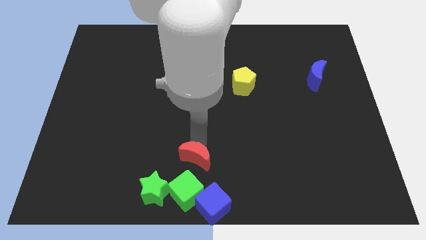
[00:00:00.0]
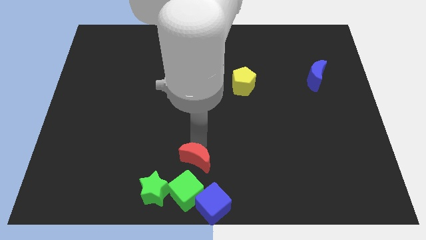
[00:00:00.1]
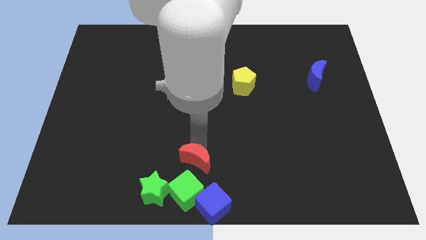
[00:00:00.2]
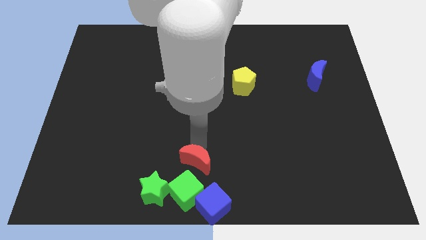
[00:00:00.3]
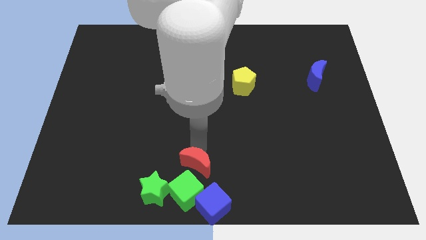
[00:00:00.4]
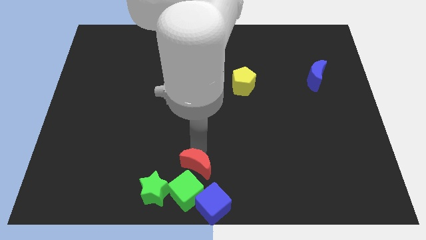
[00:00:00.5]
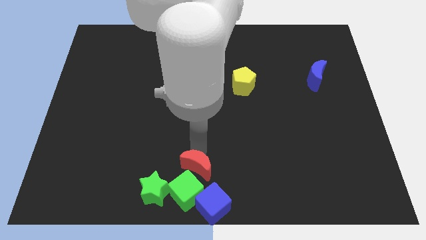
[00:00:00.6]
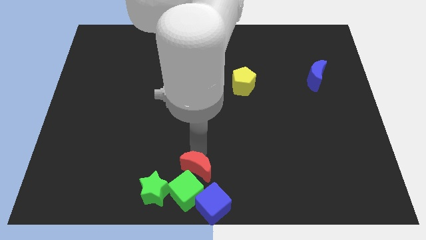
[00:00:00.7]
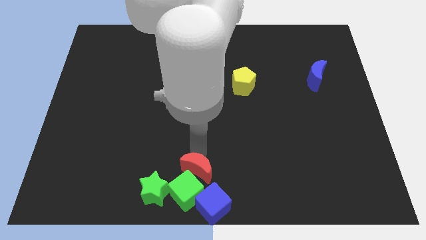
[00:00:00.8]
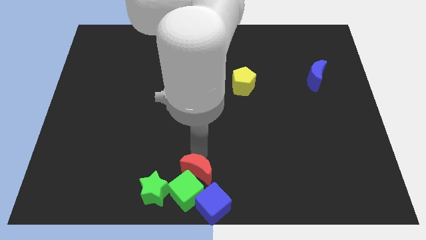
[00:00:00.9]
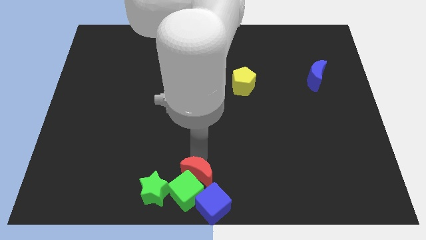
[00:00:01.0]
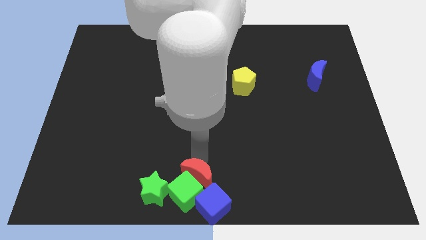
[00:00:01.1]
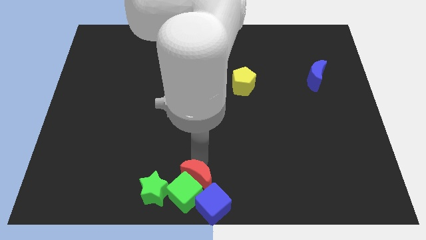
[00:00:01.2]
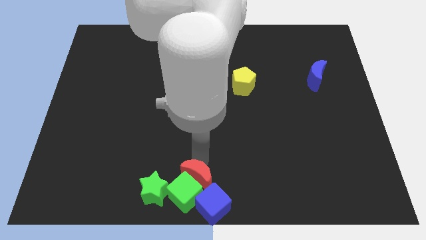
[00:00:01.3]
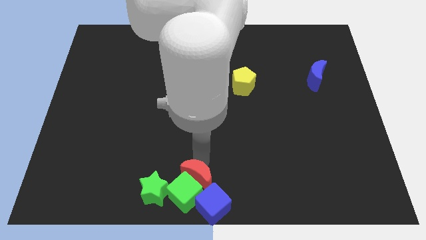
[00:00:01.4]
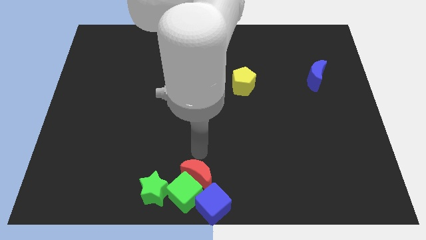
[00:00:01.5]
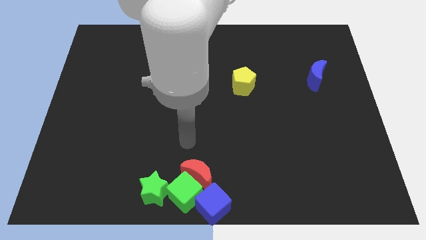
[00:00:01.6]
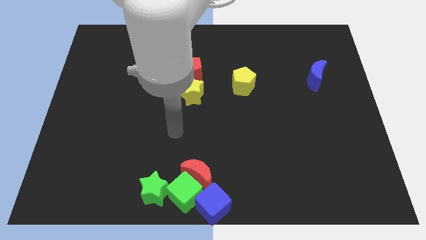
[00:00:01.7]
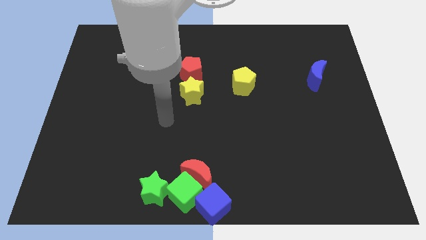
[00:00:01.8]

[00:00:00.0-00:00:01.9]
move the red crescent close to the green cube

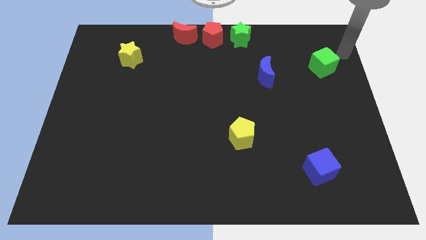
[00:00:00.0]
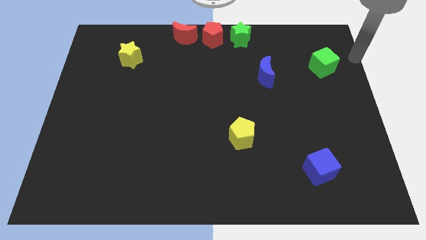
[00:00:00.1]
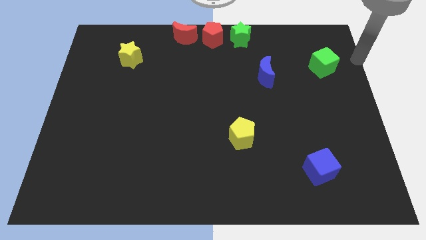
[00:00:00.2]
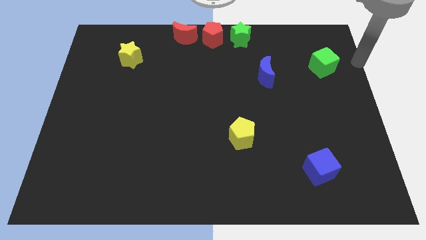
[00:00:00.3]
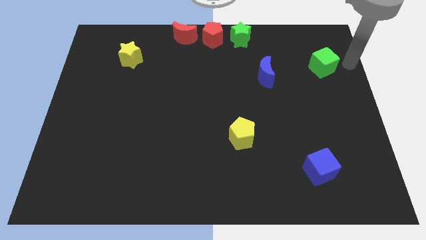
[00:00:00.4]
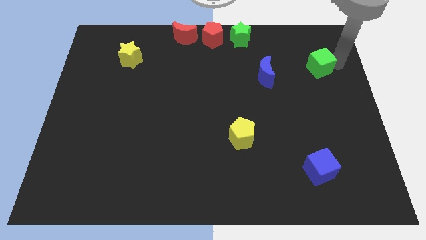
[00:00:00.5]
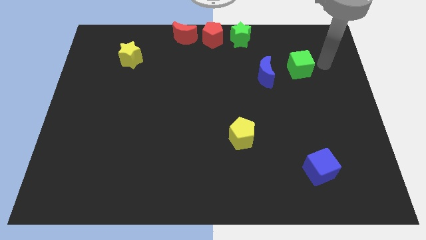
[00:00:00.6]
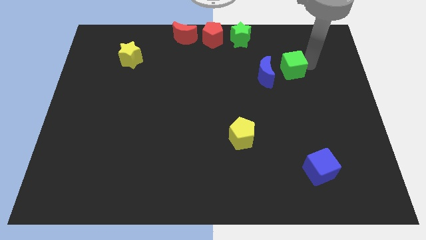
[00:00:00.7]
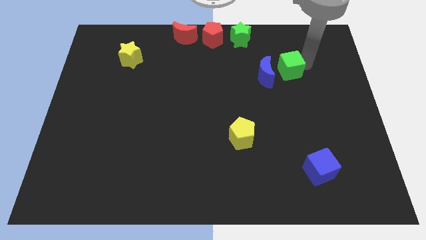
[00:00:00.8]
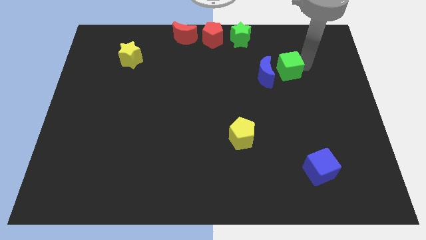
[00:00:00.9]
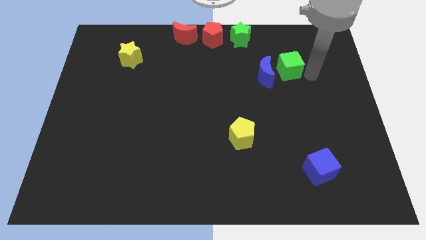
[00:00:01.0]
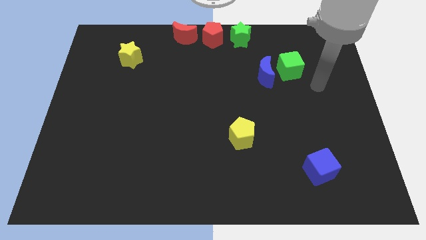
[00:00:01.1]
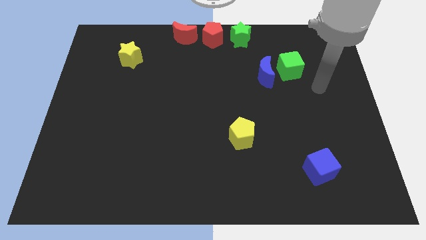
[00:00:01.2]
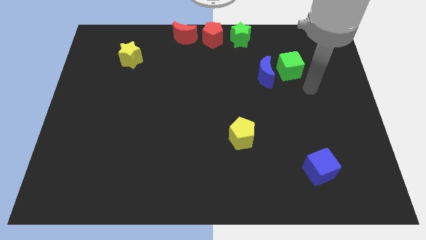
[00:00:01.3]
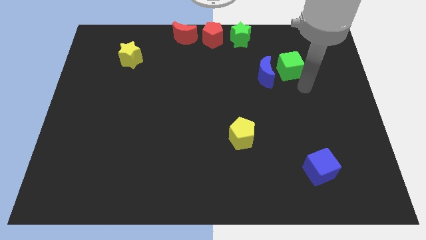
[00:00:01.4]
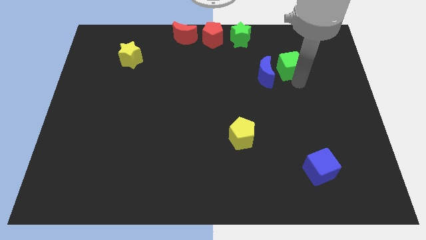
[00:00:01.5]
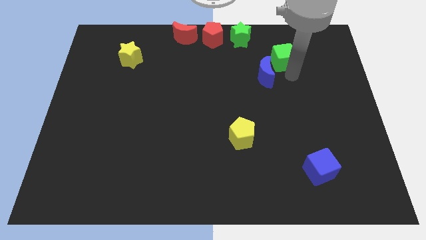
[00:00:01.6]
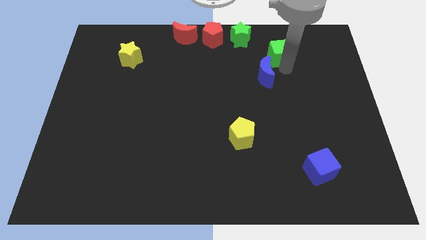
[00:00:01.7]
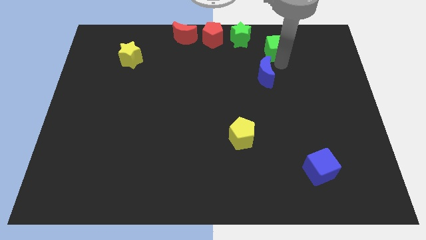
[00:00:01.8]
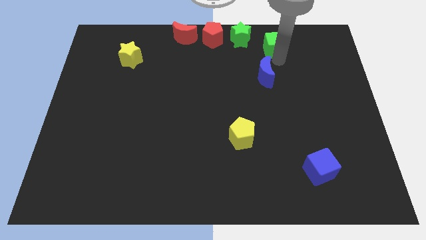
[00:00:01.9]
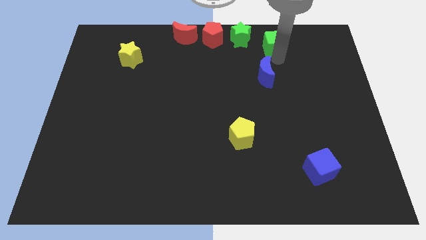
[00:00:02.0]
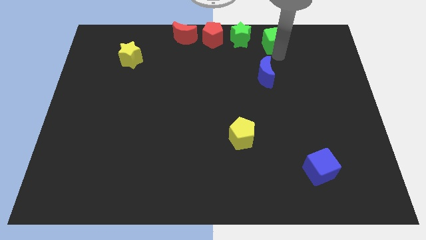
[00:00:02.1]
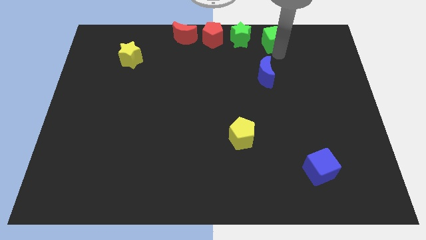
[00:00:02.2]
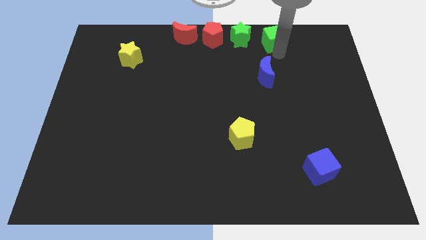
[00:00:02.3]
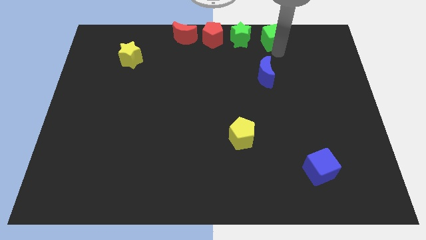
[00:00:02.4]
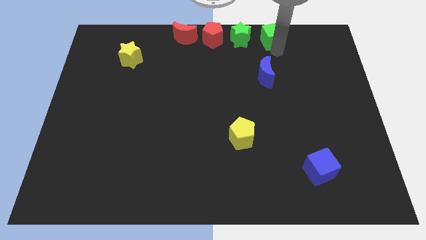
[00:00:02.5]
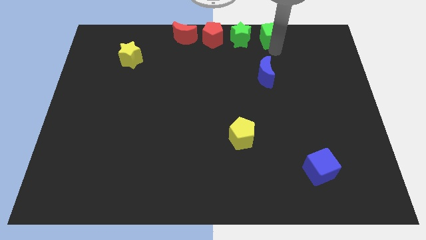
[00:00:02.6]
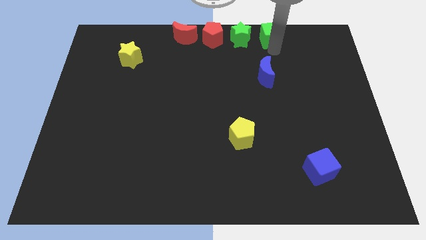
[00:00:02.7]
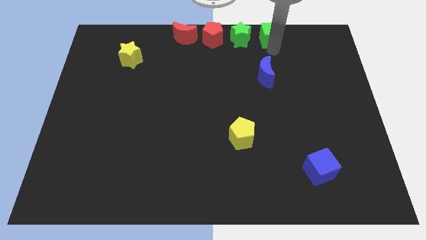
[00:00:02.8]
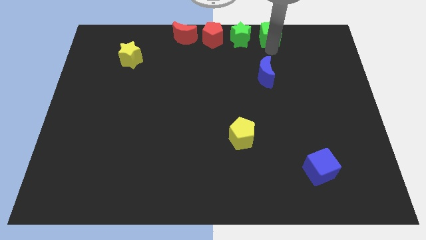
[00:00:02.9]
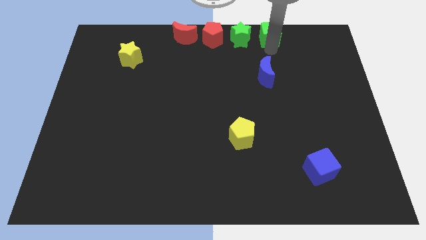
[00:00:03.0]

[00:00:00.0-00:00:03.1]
put green cube right to green star

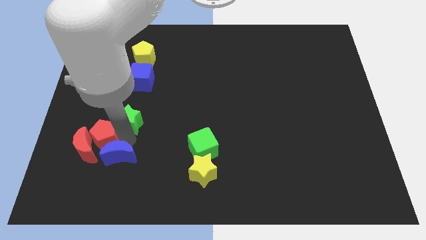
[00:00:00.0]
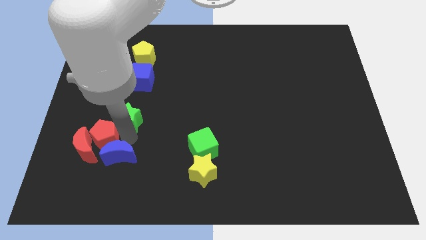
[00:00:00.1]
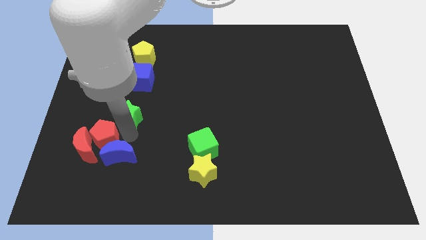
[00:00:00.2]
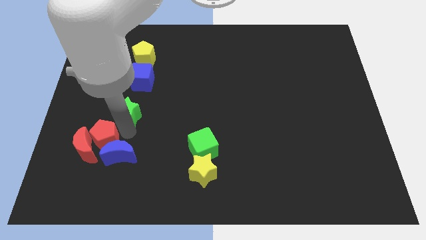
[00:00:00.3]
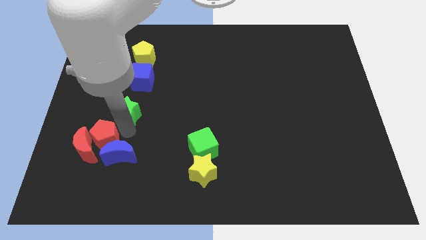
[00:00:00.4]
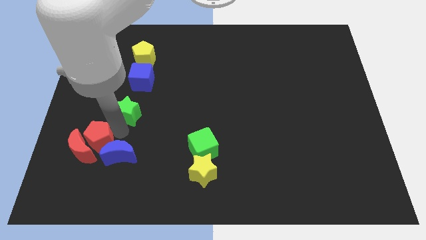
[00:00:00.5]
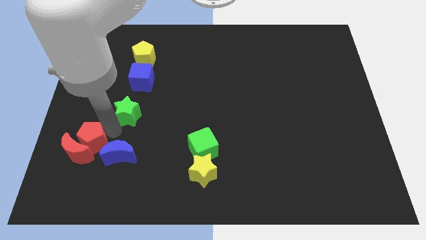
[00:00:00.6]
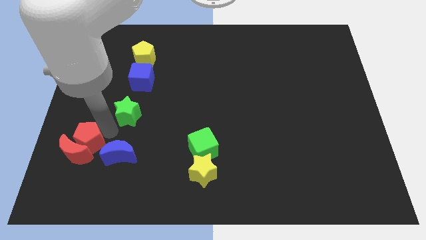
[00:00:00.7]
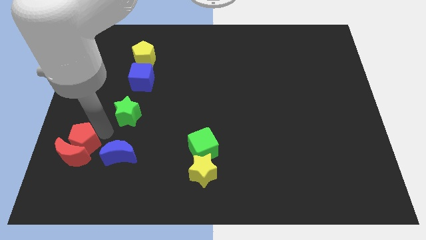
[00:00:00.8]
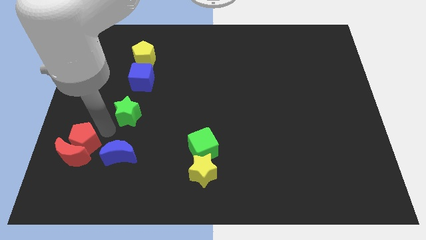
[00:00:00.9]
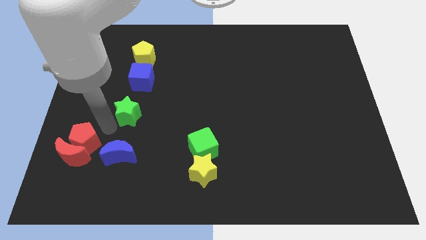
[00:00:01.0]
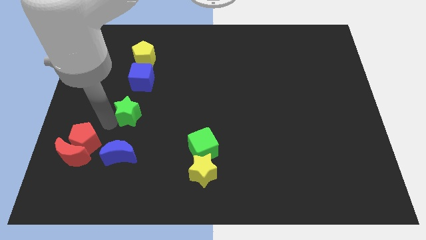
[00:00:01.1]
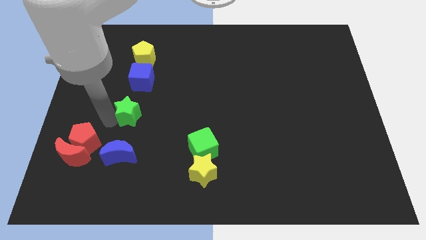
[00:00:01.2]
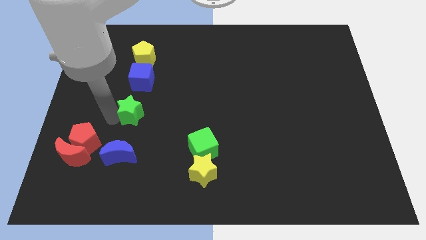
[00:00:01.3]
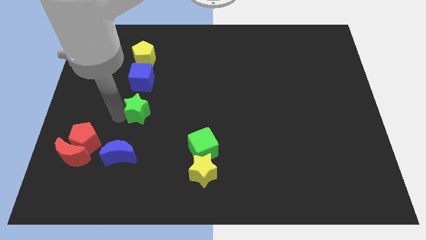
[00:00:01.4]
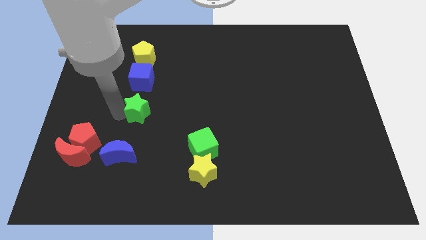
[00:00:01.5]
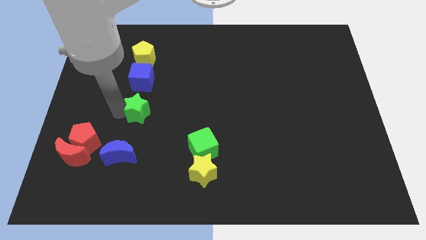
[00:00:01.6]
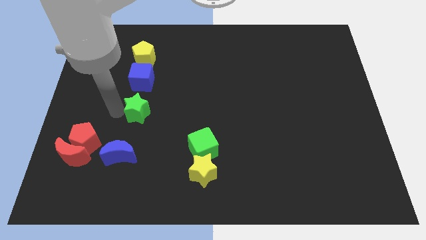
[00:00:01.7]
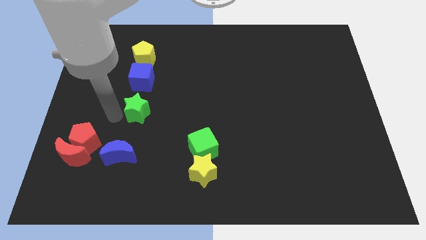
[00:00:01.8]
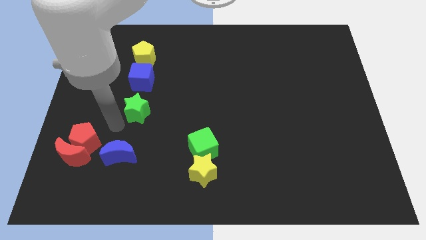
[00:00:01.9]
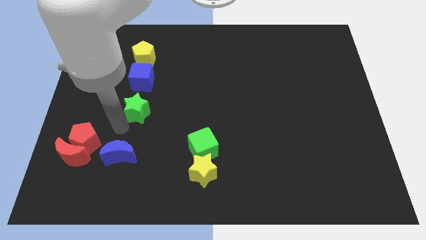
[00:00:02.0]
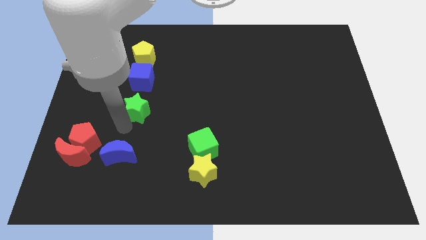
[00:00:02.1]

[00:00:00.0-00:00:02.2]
place the green star down to the blue cube

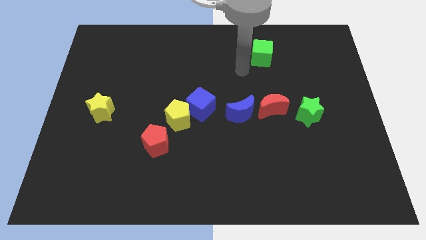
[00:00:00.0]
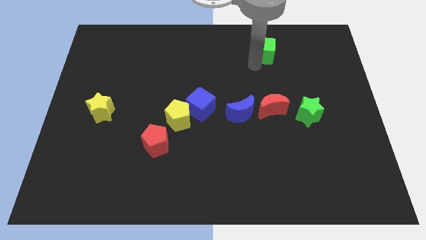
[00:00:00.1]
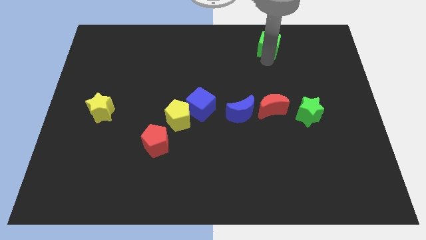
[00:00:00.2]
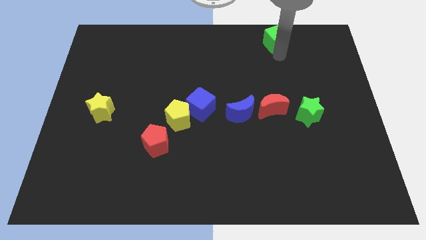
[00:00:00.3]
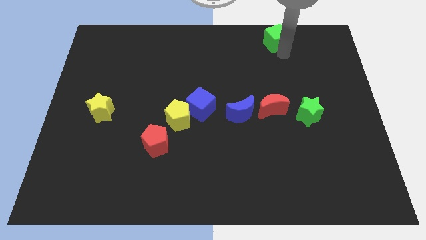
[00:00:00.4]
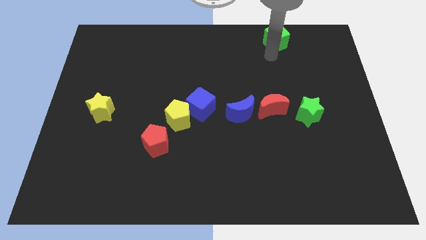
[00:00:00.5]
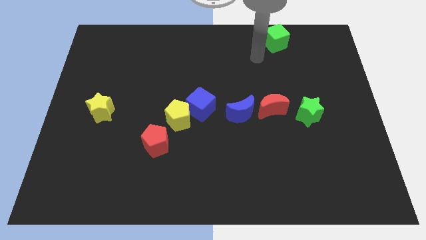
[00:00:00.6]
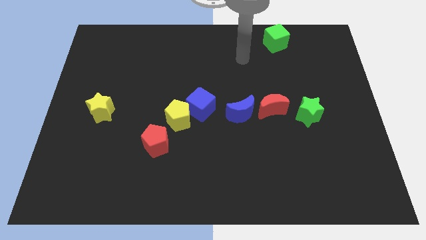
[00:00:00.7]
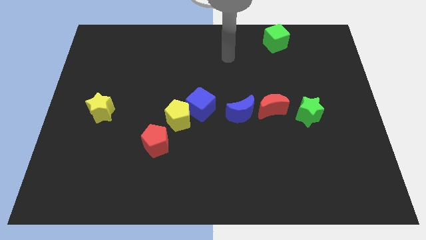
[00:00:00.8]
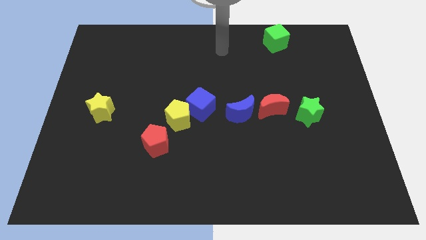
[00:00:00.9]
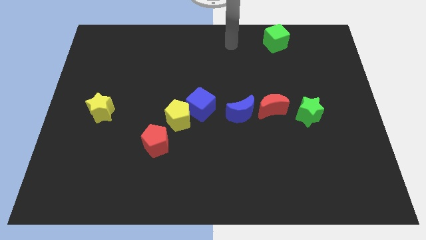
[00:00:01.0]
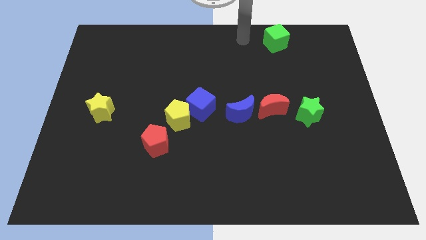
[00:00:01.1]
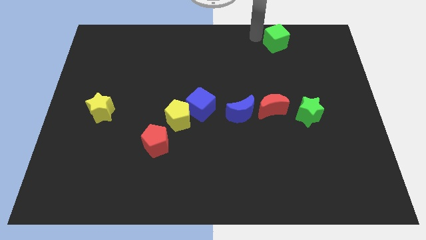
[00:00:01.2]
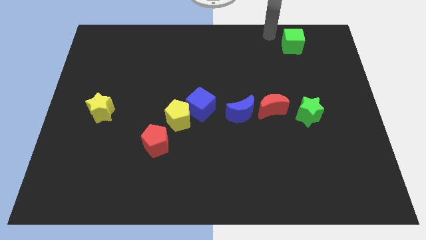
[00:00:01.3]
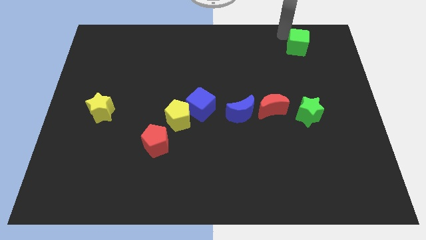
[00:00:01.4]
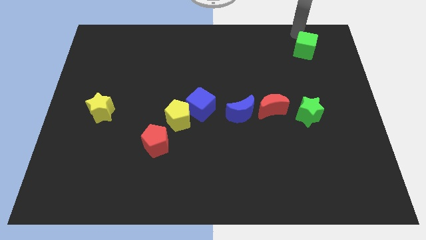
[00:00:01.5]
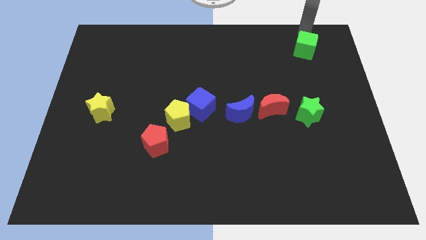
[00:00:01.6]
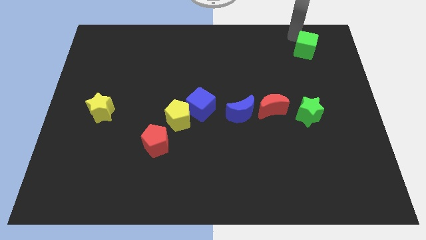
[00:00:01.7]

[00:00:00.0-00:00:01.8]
move the green cube towards the top right corner
